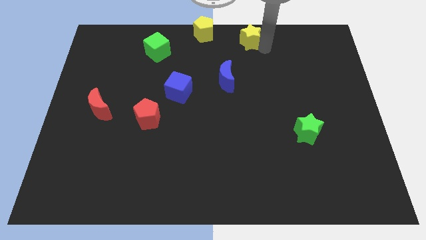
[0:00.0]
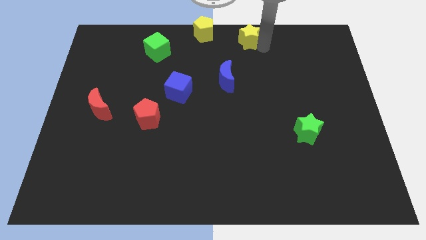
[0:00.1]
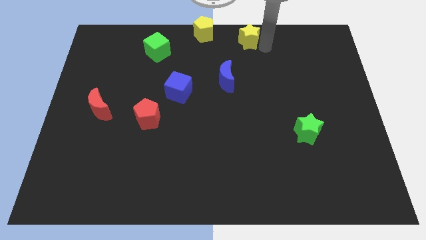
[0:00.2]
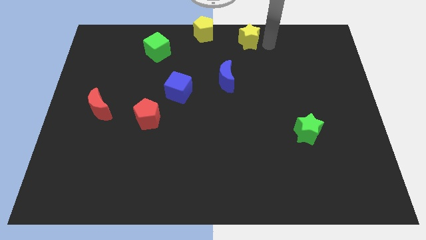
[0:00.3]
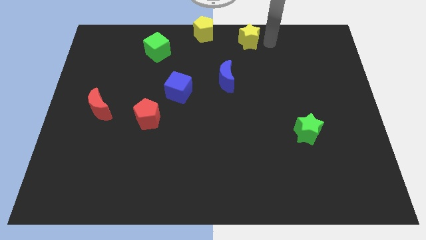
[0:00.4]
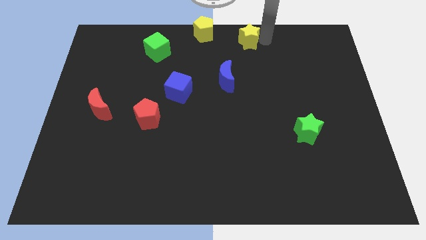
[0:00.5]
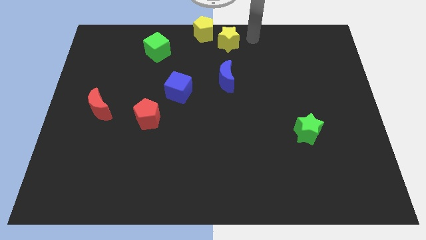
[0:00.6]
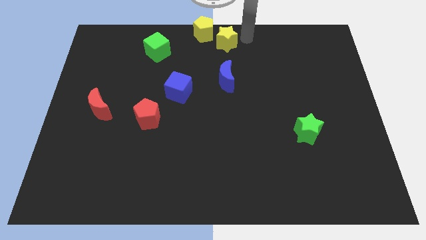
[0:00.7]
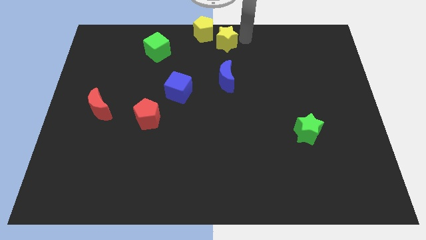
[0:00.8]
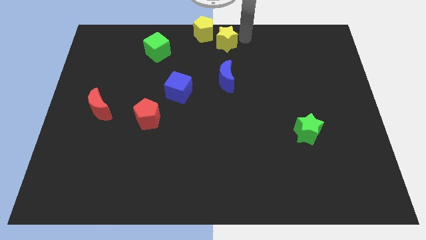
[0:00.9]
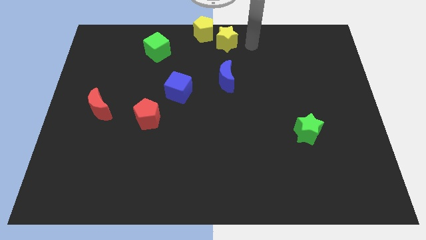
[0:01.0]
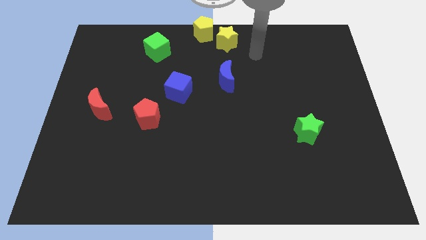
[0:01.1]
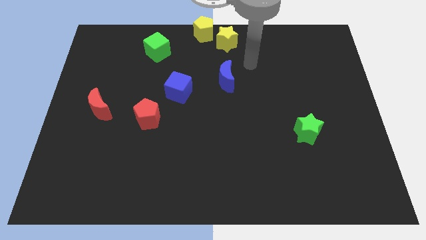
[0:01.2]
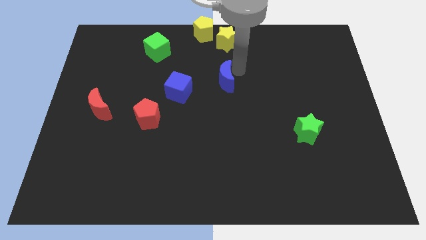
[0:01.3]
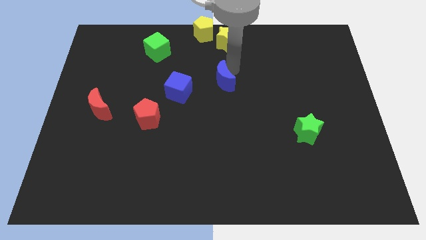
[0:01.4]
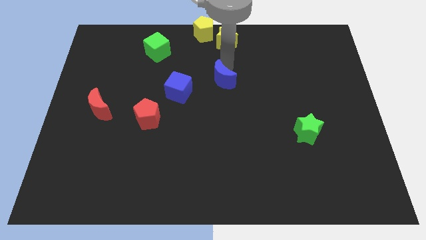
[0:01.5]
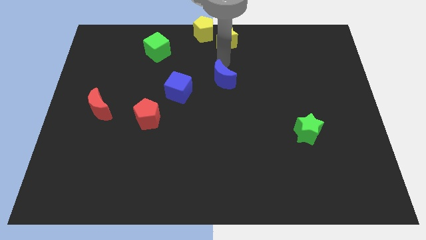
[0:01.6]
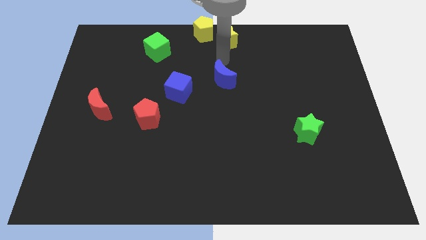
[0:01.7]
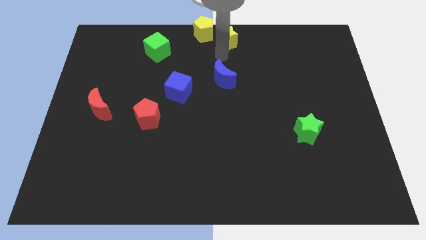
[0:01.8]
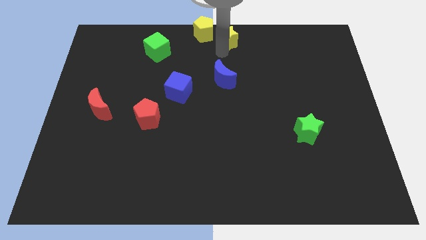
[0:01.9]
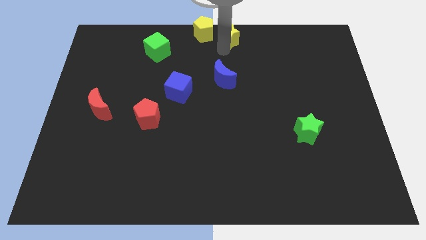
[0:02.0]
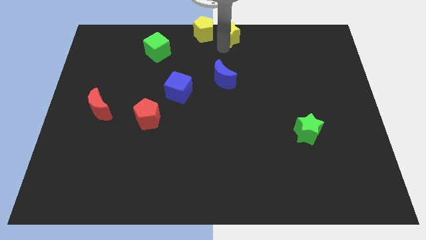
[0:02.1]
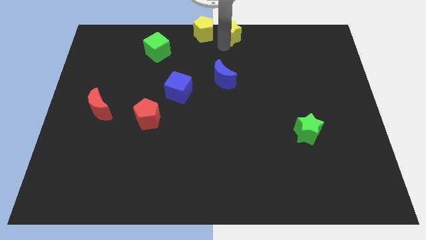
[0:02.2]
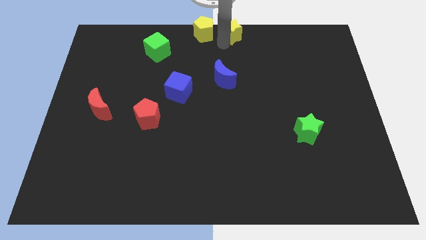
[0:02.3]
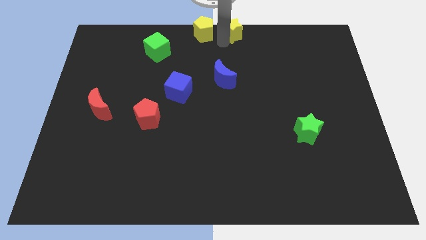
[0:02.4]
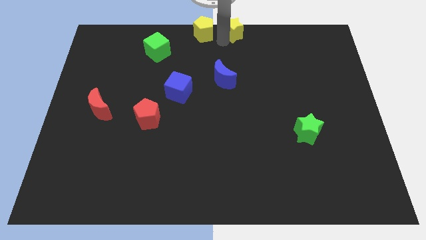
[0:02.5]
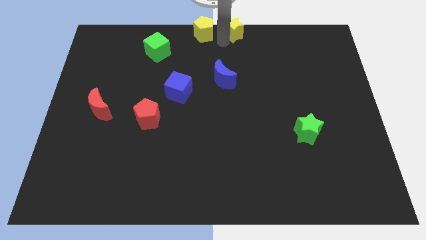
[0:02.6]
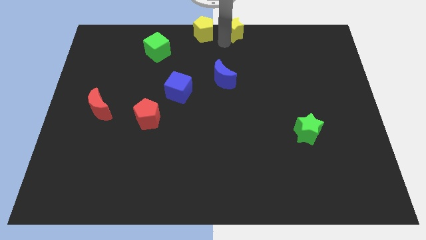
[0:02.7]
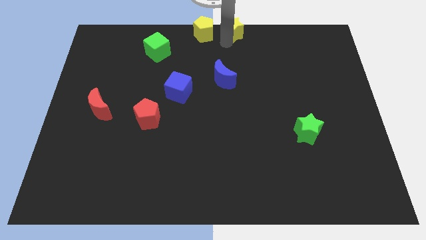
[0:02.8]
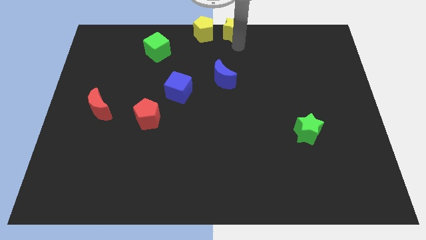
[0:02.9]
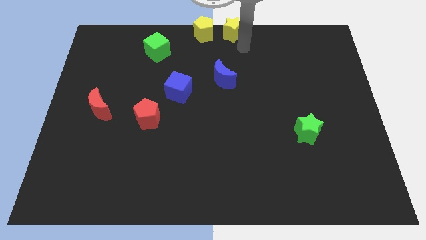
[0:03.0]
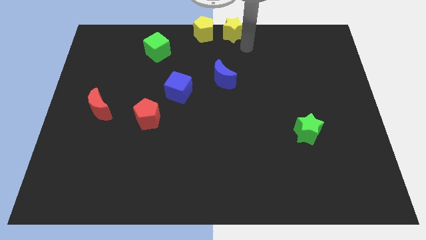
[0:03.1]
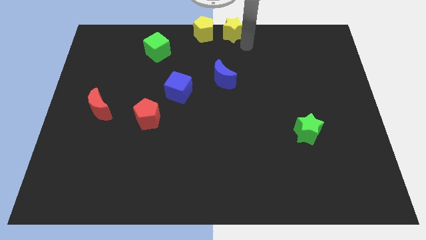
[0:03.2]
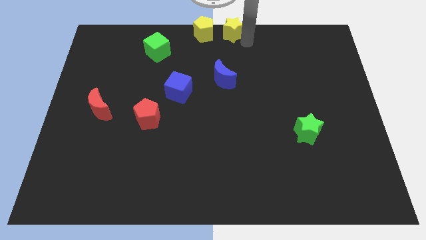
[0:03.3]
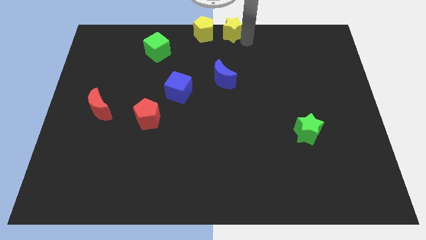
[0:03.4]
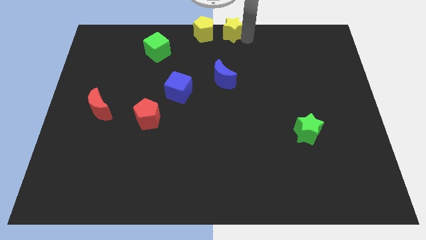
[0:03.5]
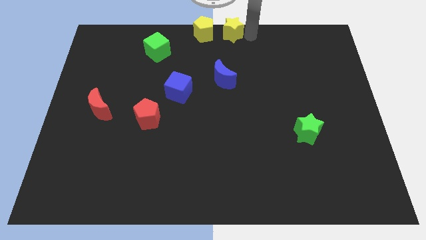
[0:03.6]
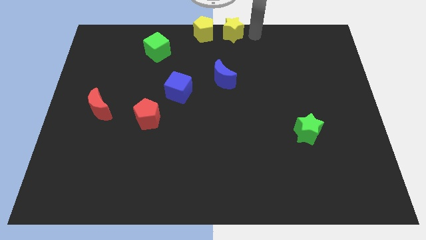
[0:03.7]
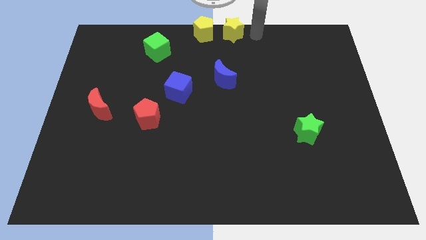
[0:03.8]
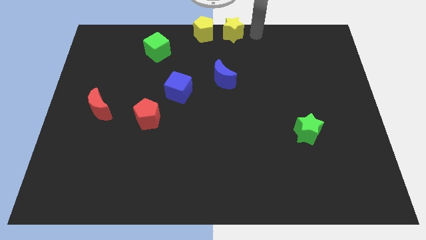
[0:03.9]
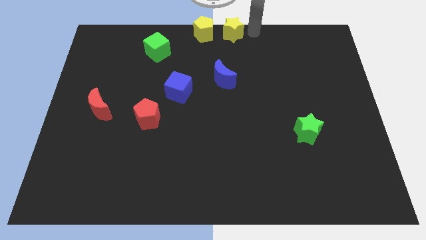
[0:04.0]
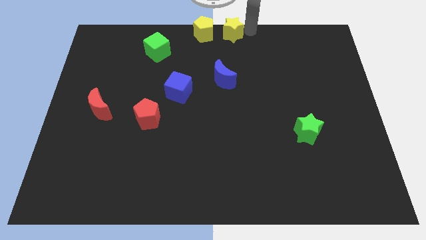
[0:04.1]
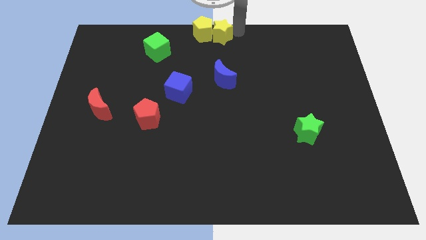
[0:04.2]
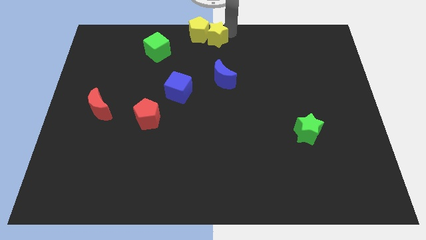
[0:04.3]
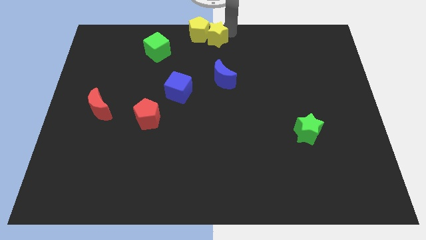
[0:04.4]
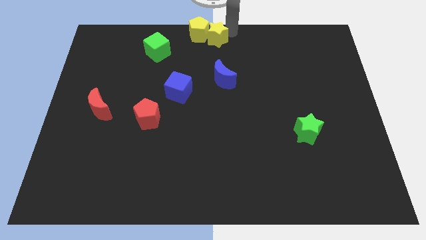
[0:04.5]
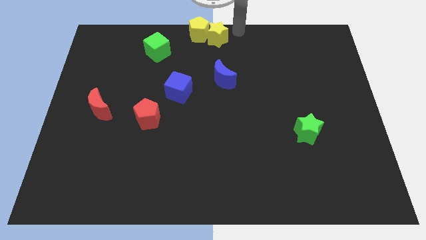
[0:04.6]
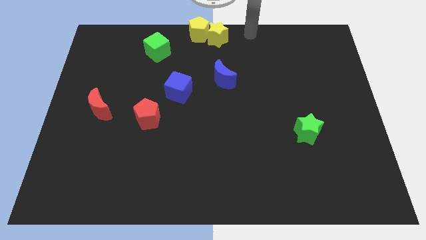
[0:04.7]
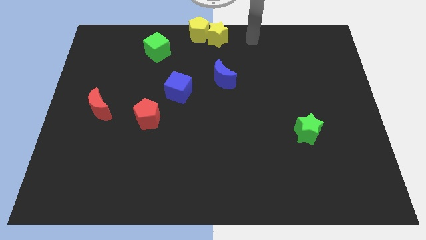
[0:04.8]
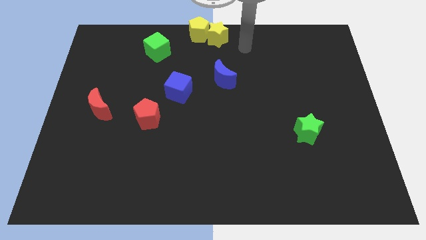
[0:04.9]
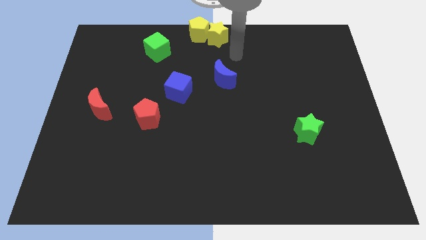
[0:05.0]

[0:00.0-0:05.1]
slide yellow star into yellow pentagon

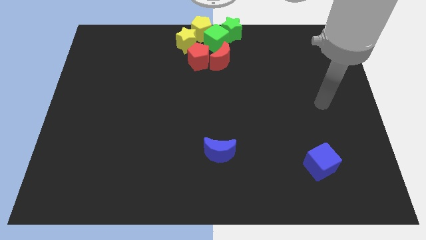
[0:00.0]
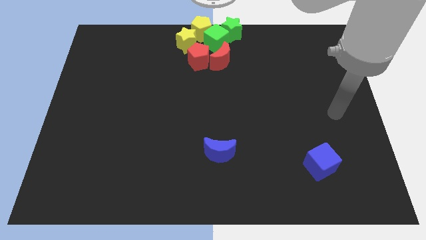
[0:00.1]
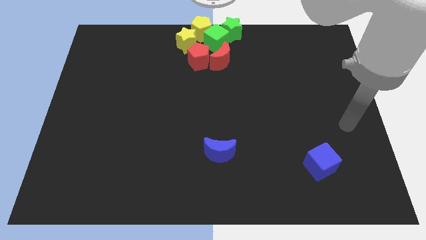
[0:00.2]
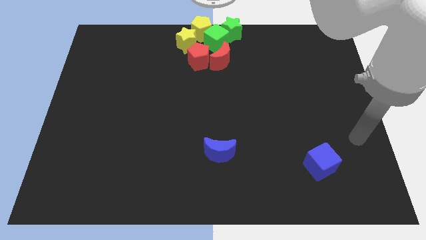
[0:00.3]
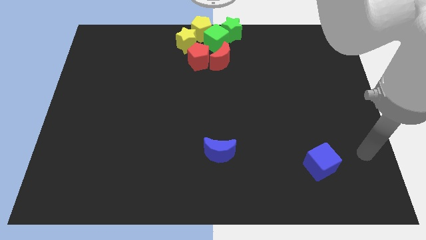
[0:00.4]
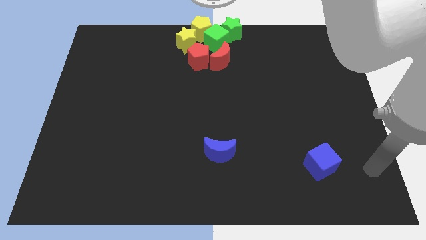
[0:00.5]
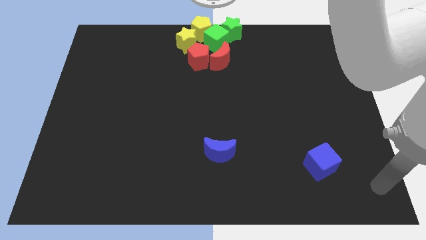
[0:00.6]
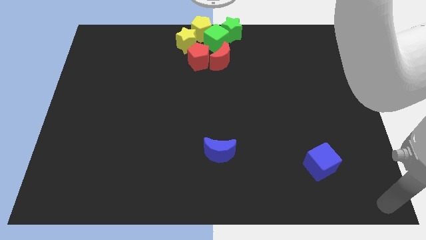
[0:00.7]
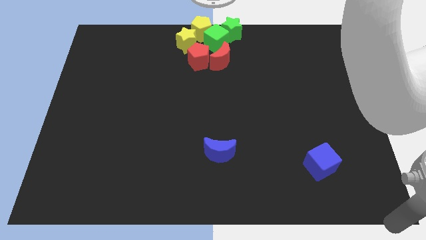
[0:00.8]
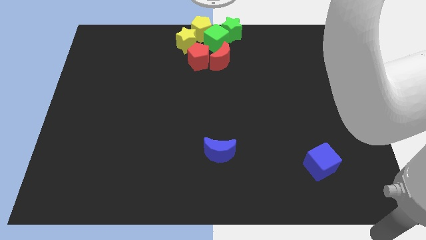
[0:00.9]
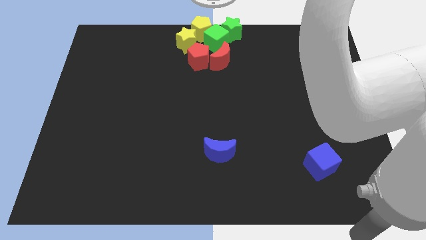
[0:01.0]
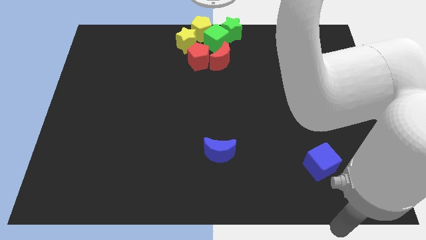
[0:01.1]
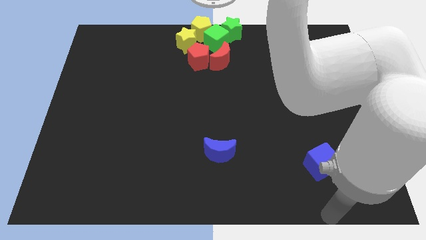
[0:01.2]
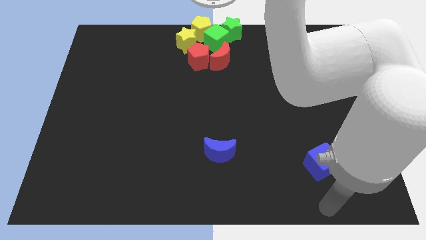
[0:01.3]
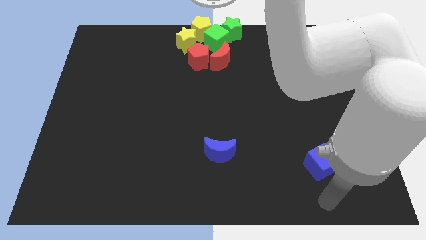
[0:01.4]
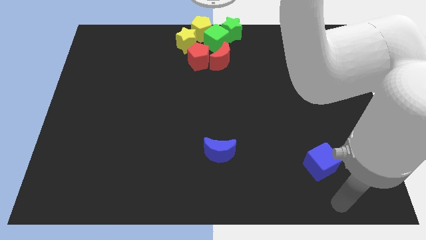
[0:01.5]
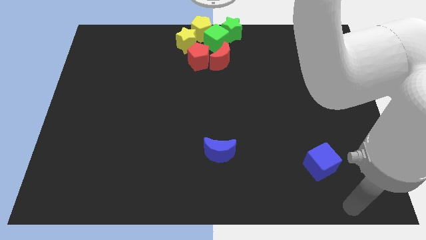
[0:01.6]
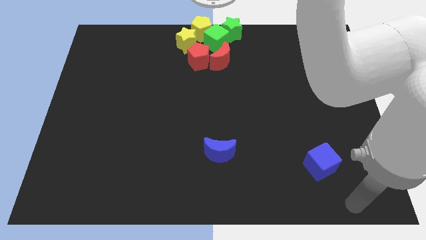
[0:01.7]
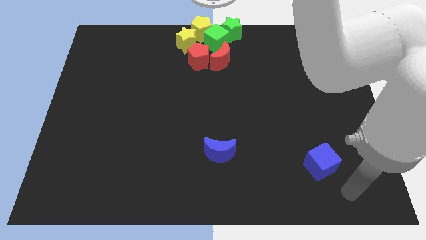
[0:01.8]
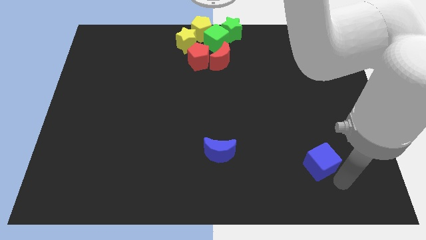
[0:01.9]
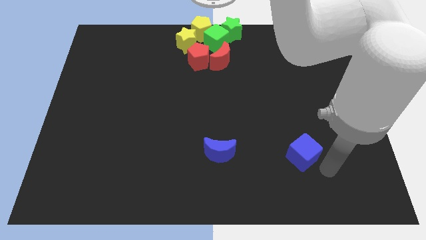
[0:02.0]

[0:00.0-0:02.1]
point your hand at the bottom right side of the blue cube

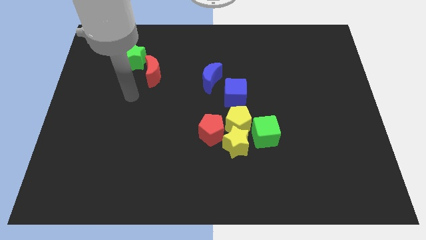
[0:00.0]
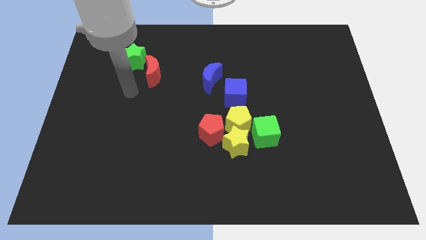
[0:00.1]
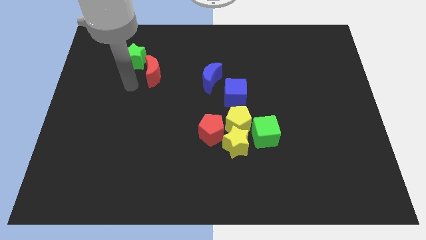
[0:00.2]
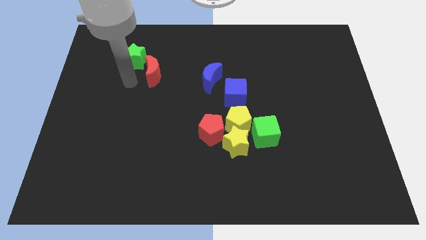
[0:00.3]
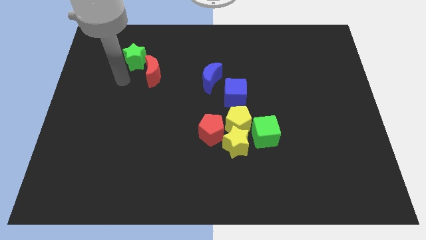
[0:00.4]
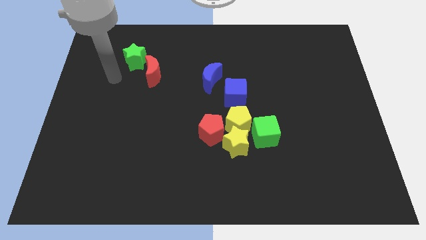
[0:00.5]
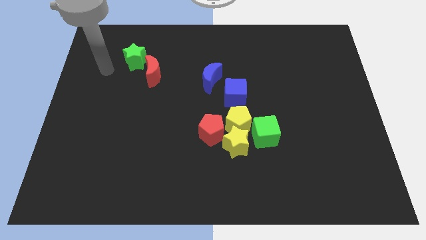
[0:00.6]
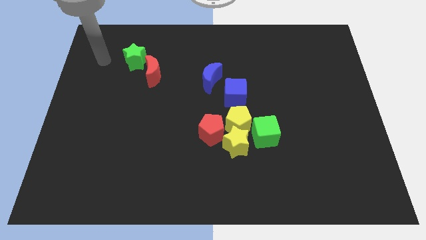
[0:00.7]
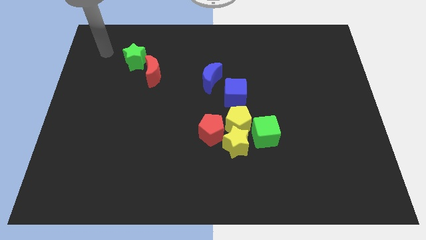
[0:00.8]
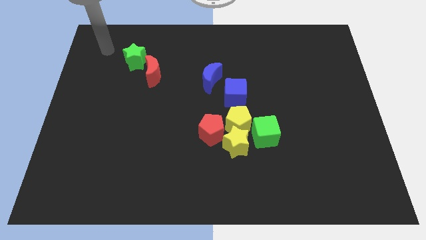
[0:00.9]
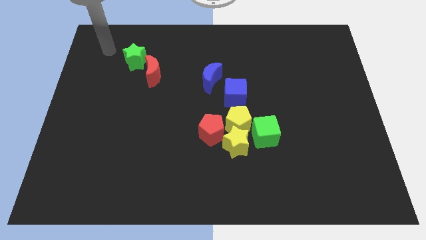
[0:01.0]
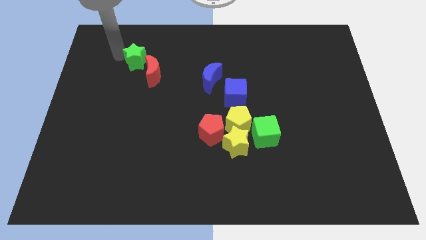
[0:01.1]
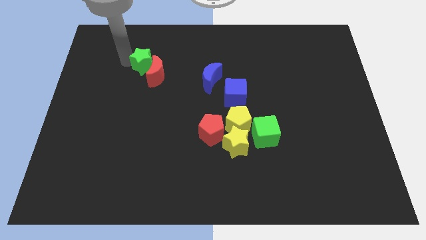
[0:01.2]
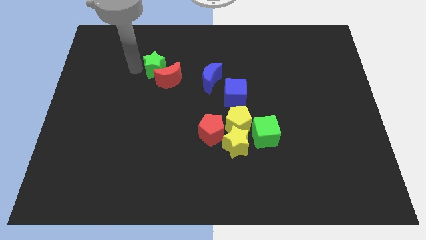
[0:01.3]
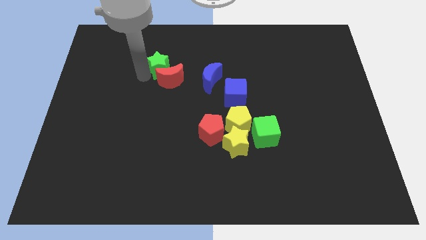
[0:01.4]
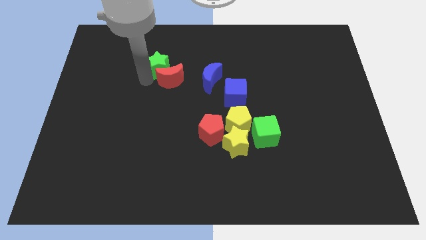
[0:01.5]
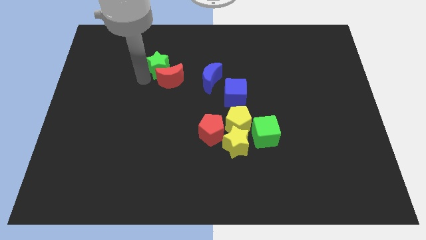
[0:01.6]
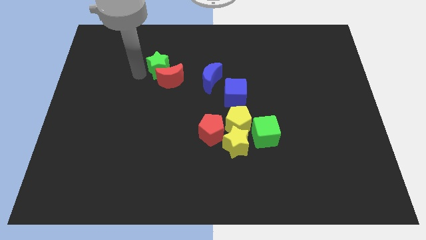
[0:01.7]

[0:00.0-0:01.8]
push the green star into the red moon
